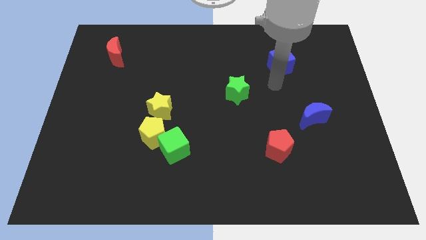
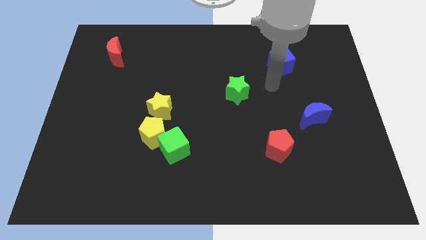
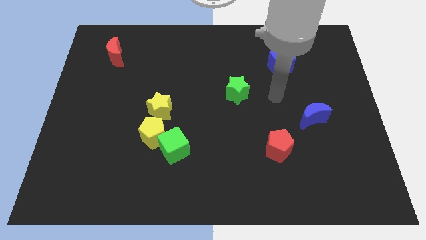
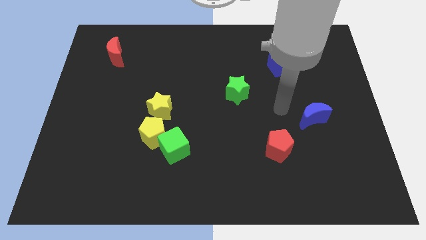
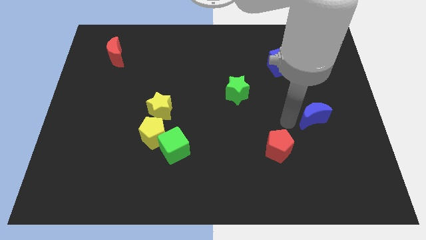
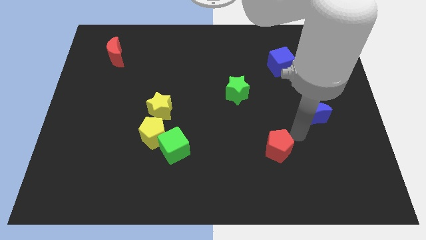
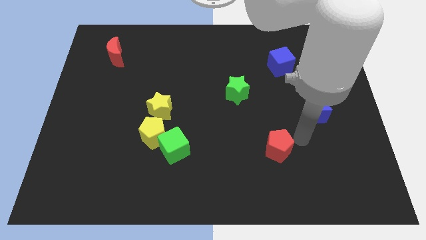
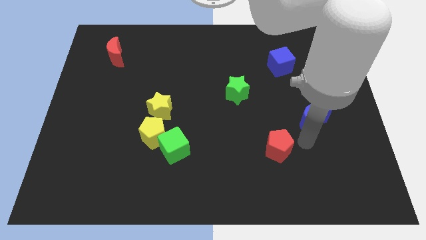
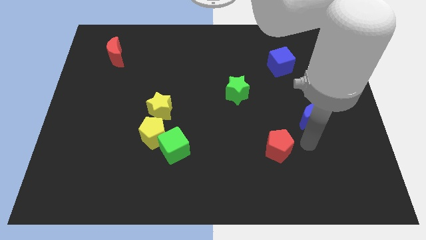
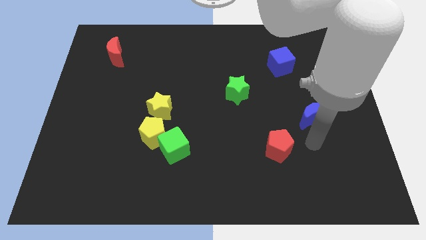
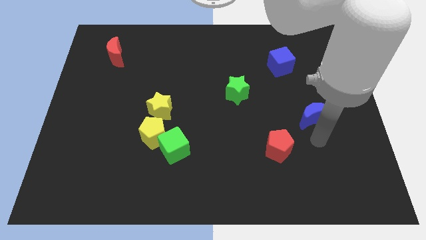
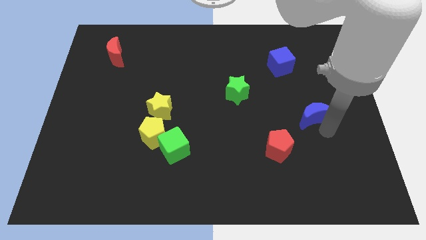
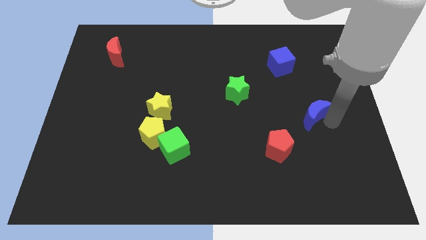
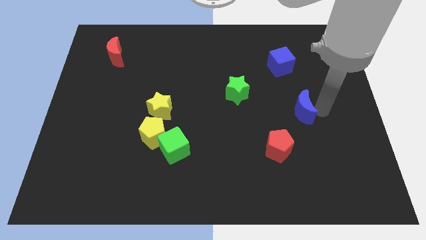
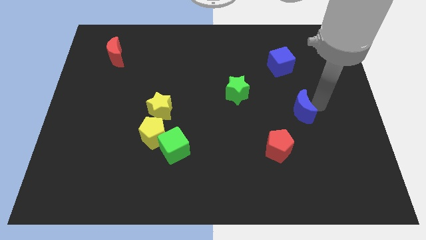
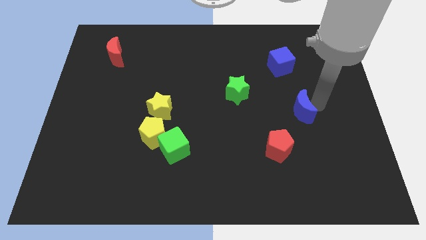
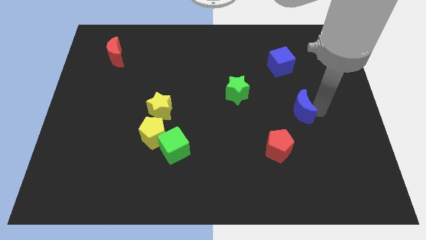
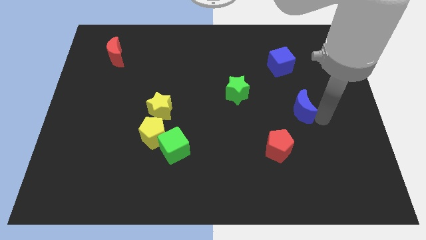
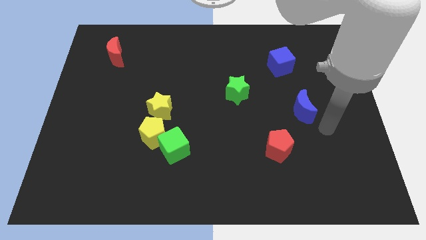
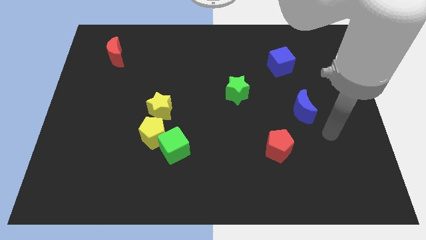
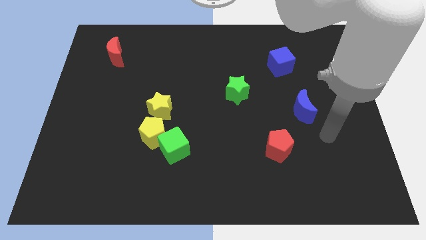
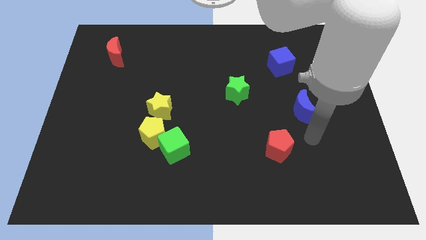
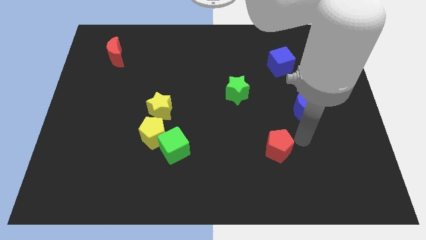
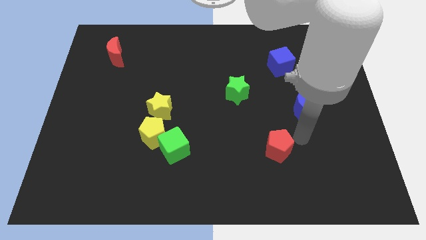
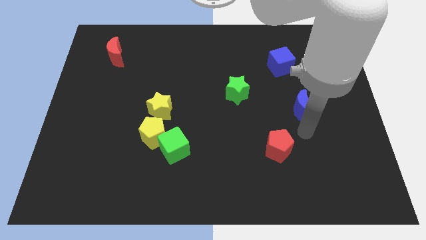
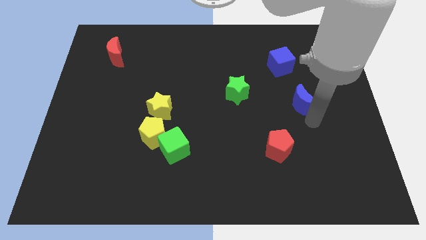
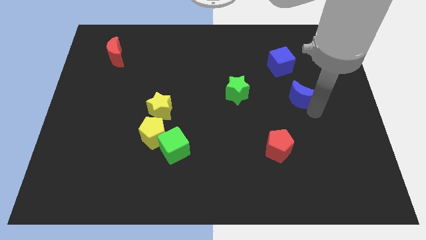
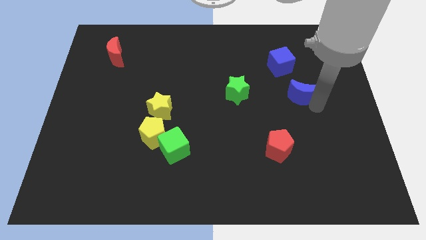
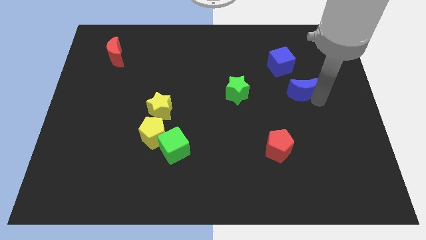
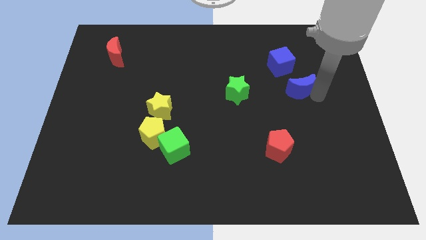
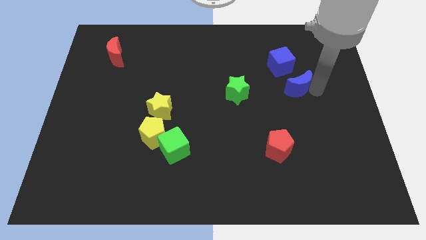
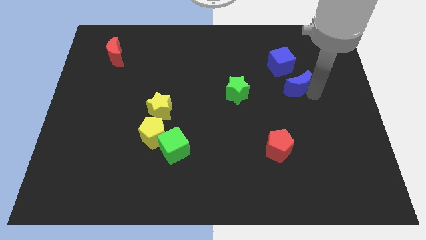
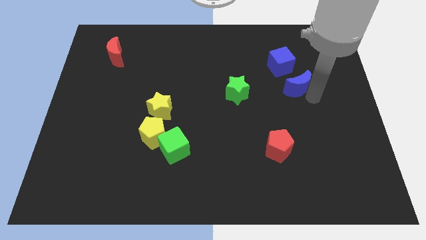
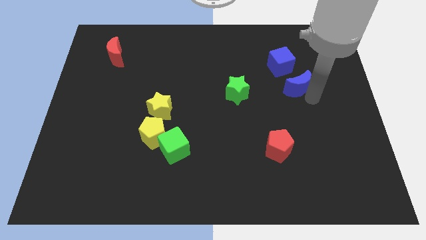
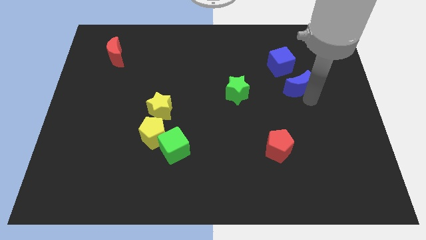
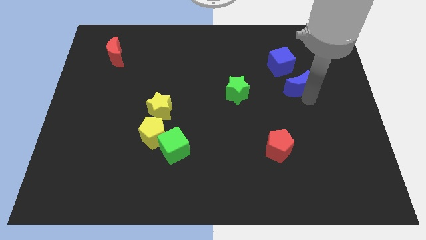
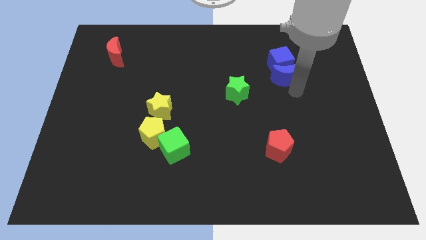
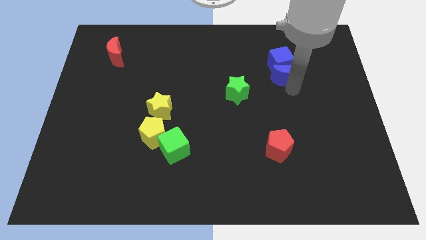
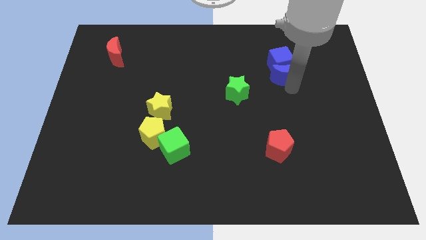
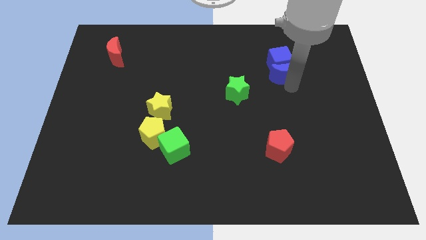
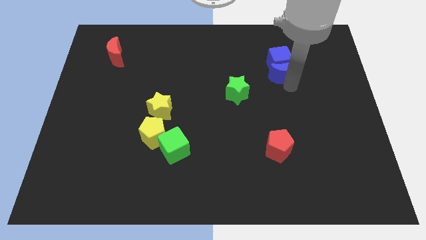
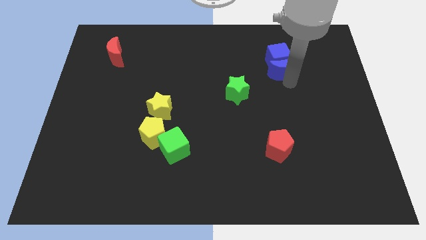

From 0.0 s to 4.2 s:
move the blue moon into the blue cube

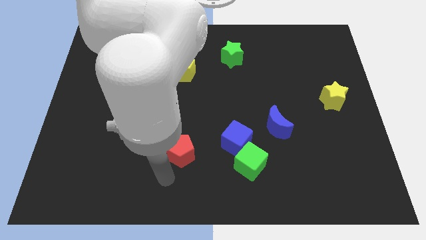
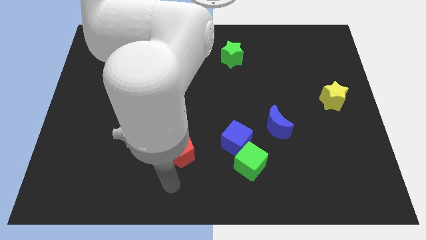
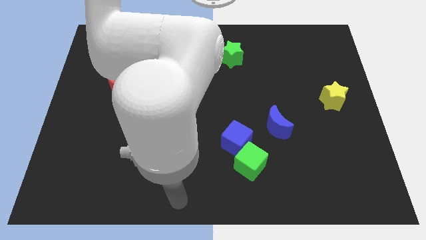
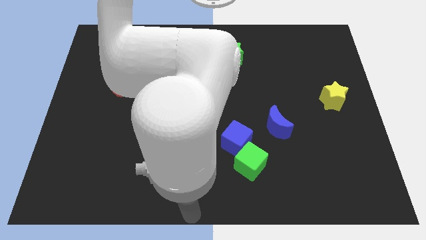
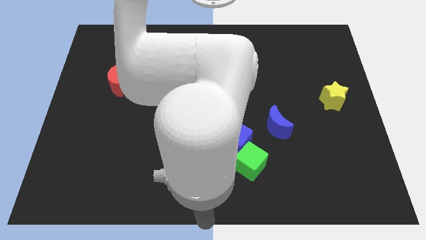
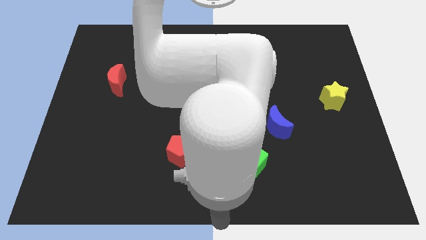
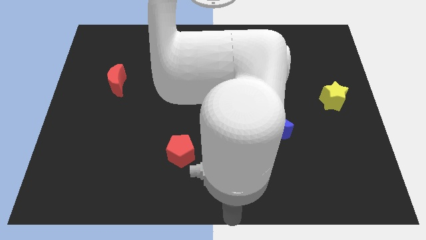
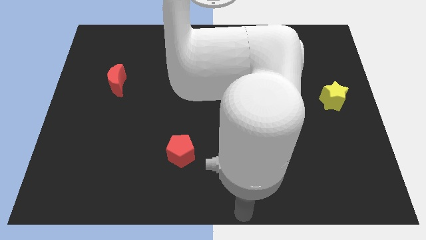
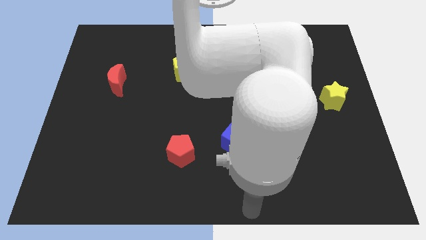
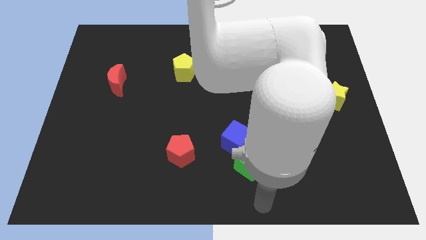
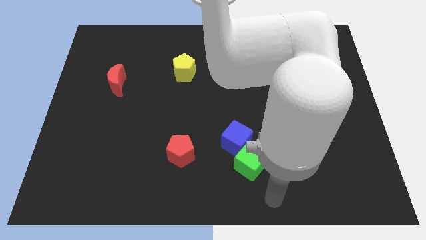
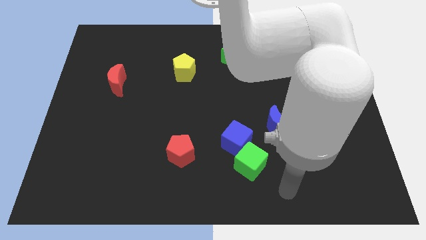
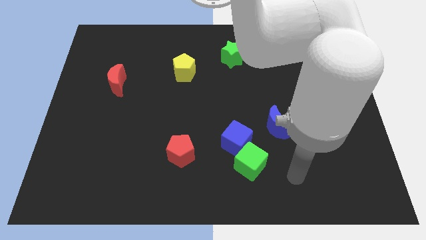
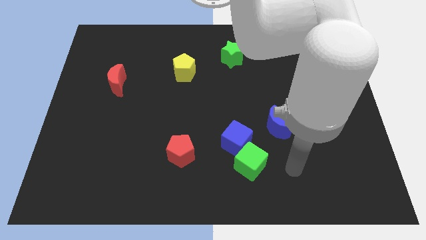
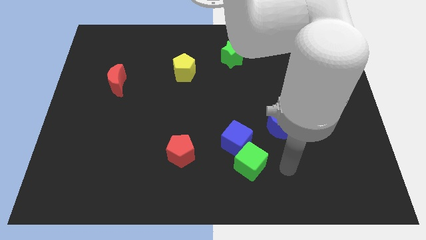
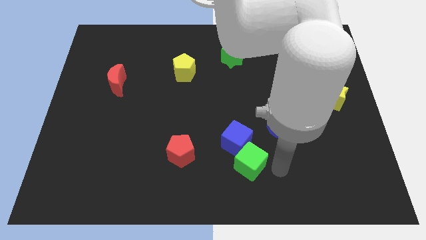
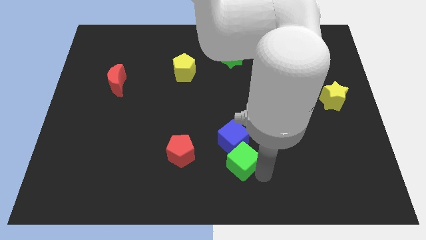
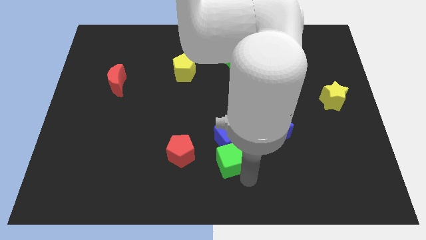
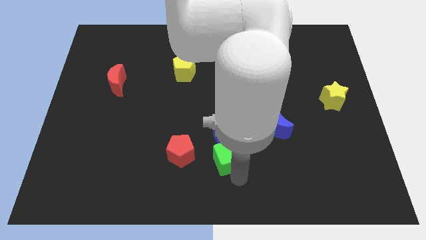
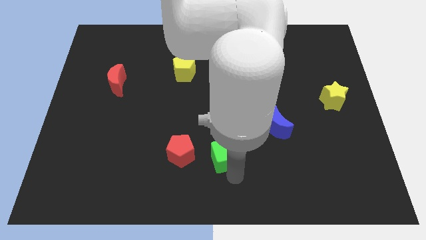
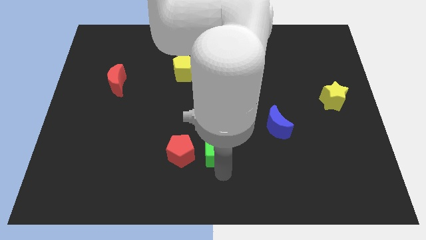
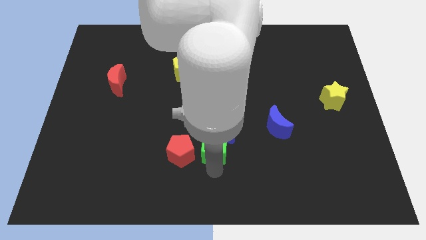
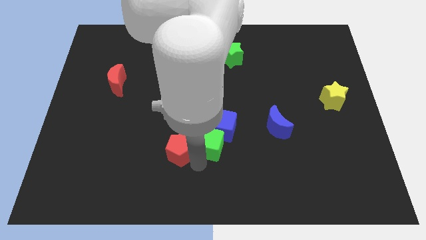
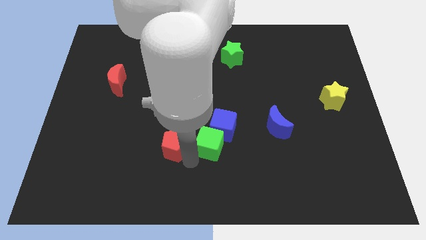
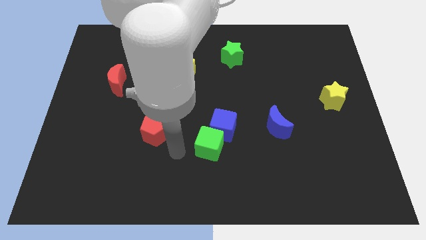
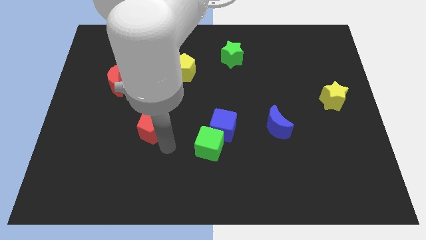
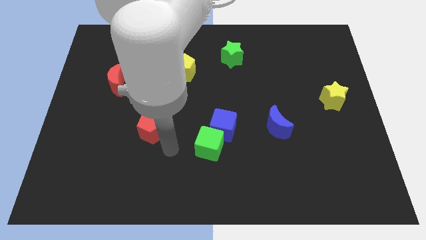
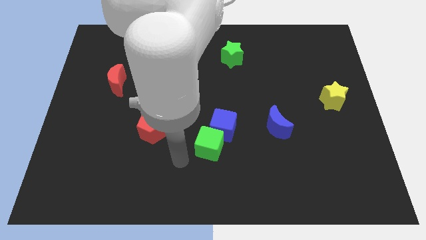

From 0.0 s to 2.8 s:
push the cubes and separate the red pentagon upwards

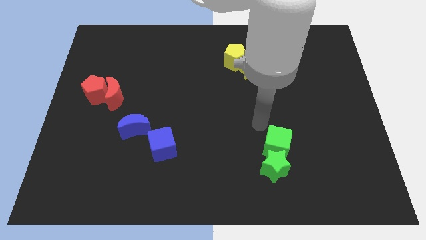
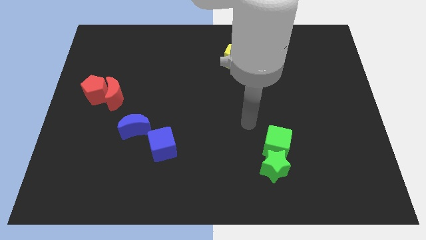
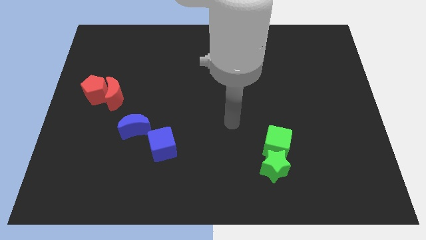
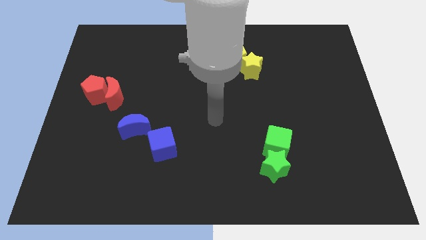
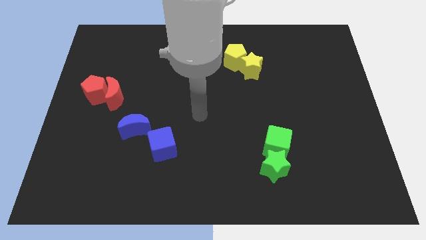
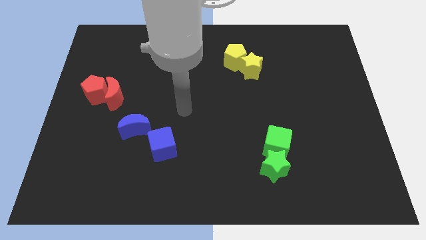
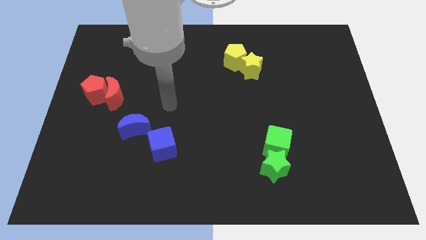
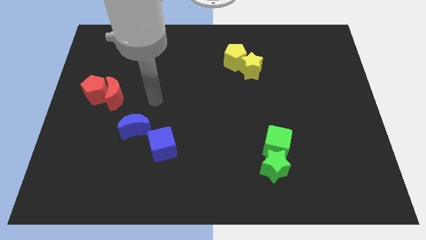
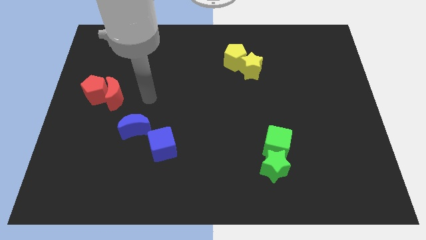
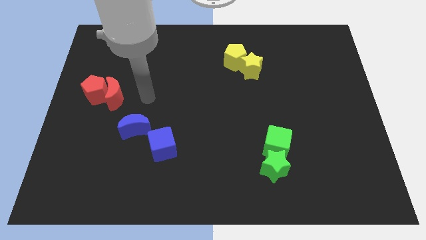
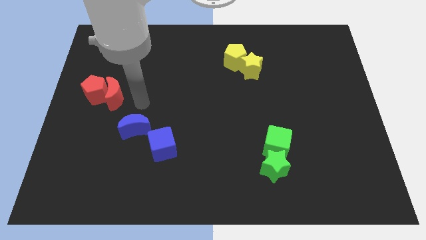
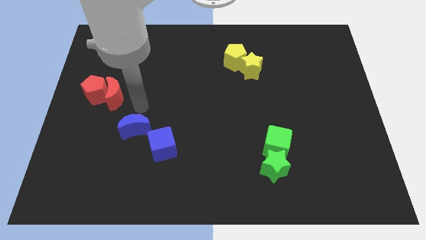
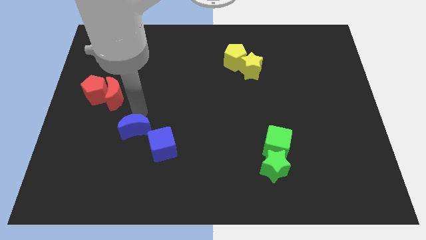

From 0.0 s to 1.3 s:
point your arm at the top of the blue crescent

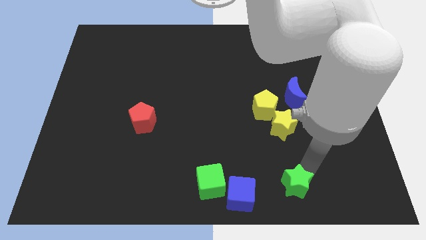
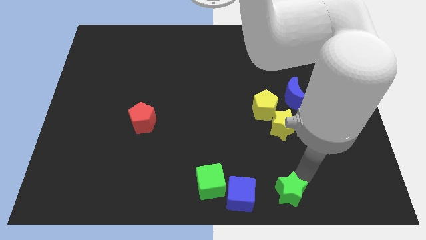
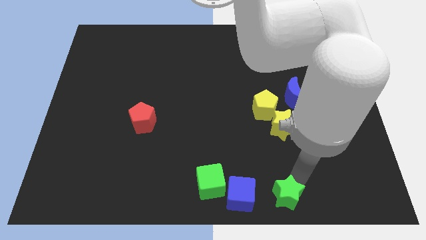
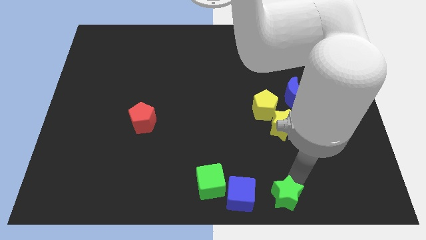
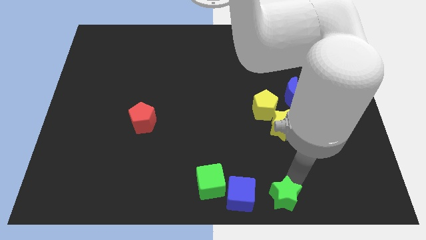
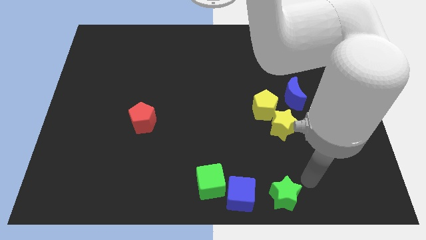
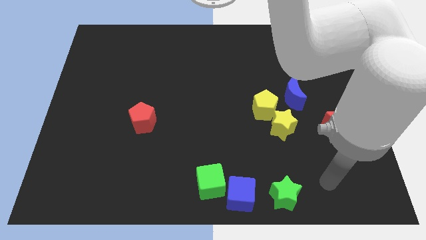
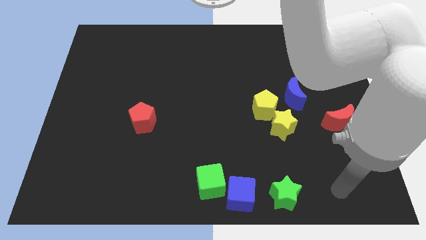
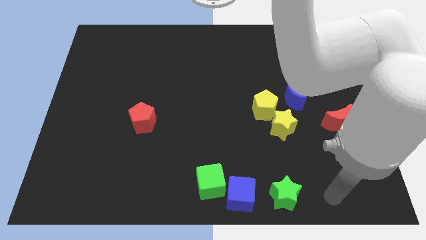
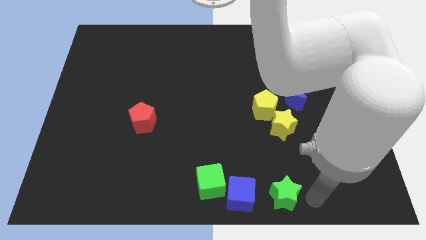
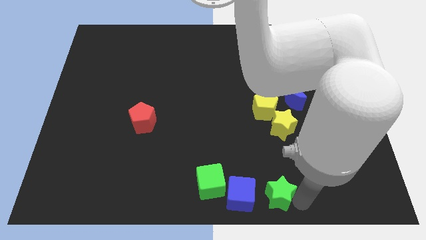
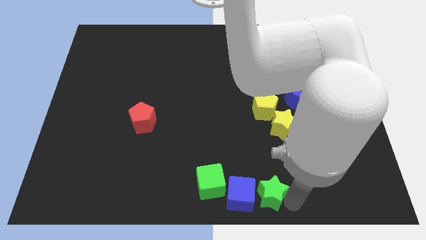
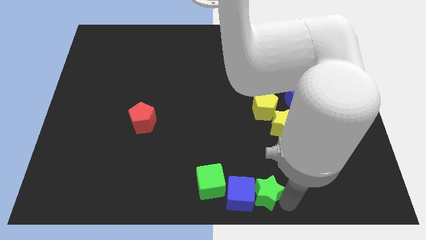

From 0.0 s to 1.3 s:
move the green star to the right side of the blue cube
